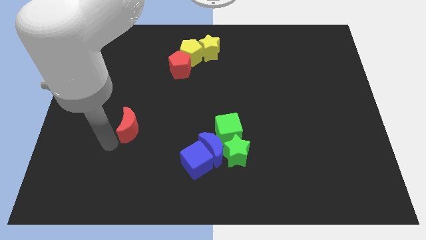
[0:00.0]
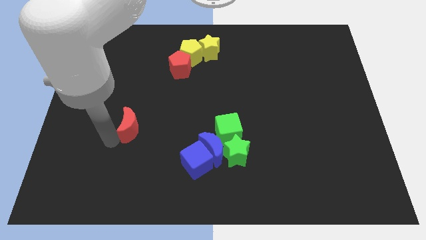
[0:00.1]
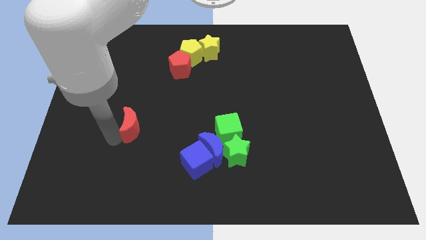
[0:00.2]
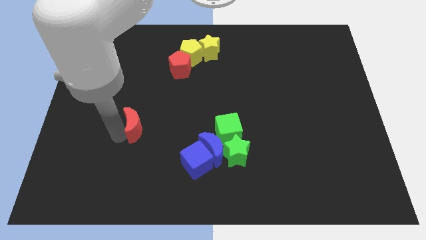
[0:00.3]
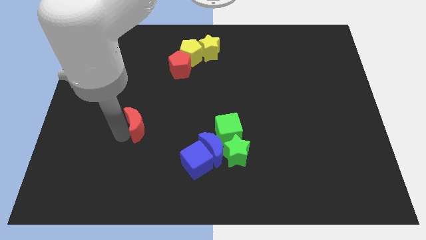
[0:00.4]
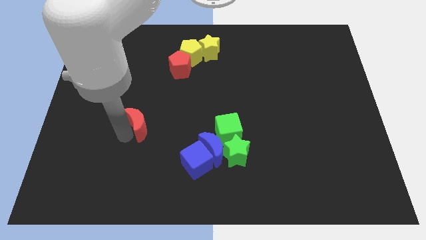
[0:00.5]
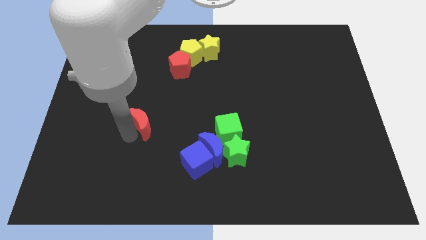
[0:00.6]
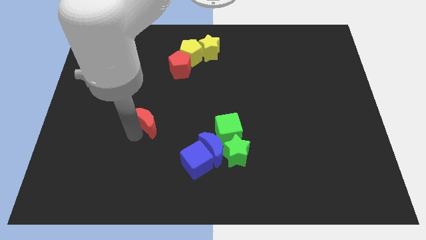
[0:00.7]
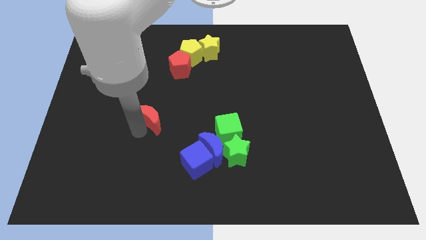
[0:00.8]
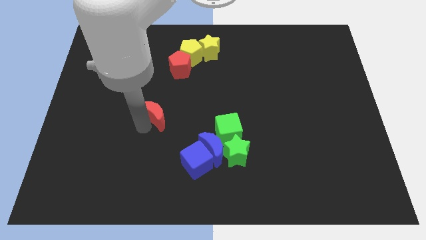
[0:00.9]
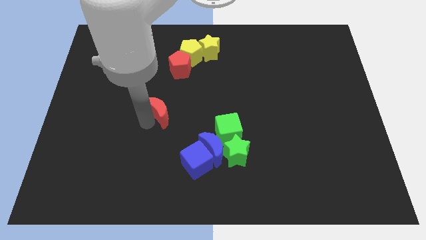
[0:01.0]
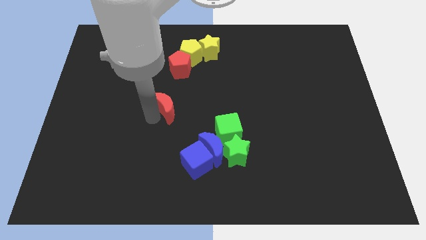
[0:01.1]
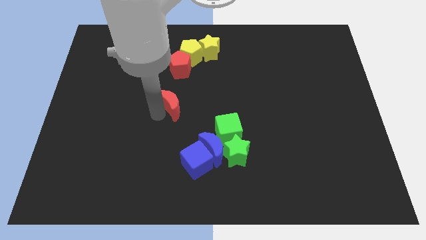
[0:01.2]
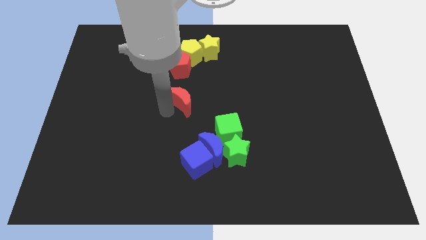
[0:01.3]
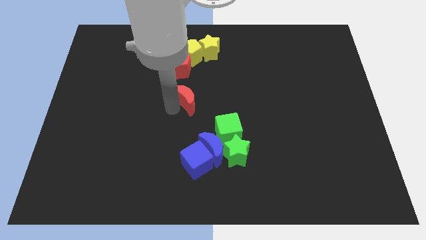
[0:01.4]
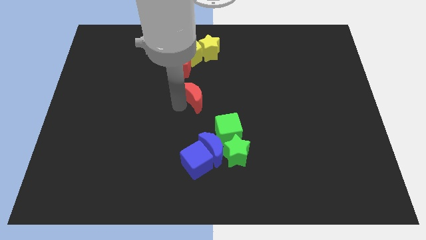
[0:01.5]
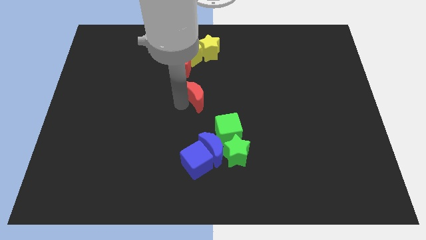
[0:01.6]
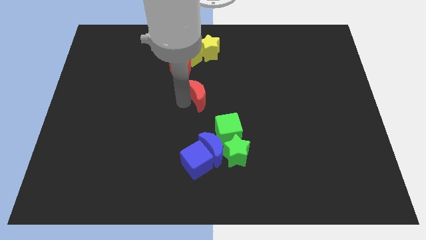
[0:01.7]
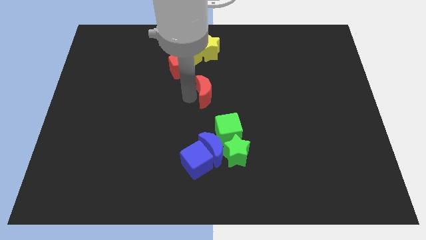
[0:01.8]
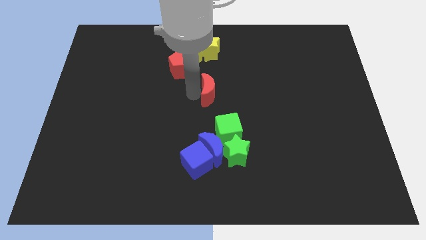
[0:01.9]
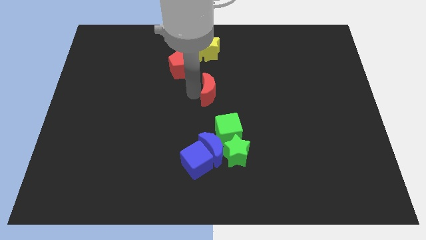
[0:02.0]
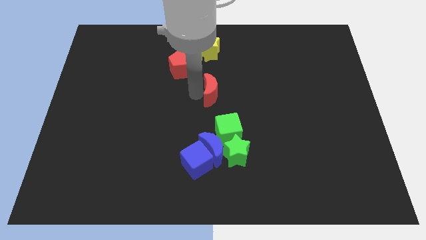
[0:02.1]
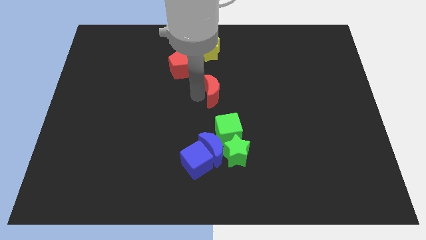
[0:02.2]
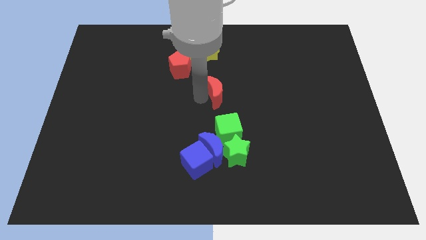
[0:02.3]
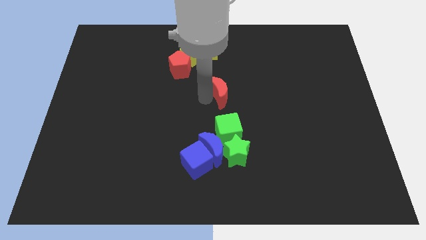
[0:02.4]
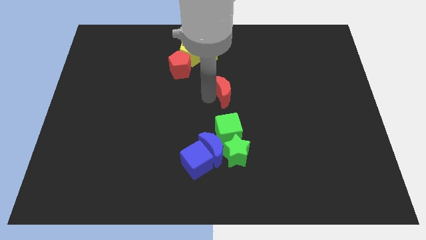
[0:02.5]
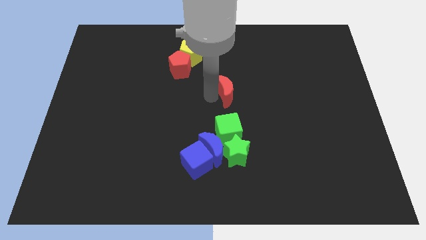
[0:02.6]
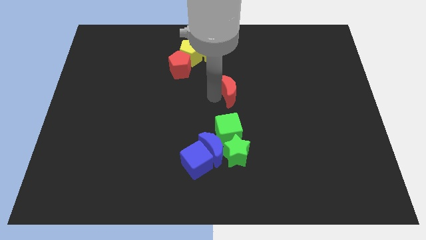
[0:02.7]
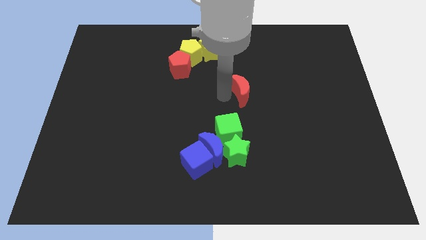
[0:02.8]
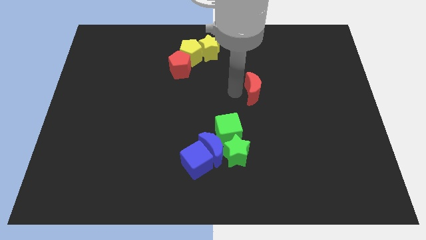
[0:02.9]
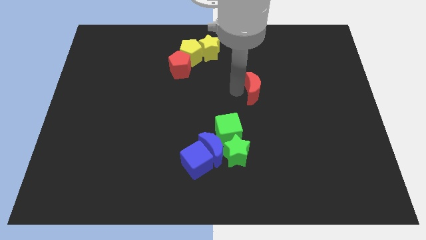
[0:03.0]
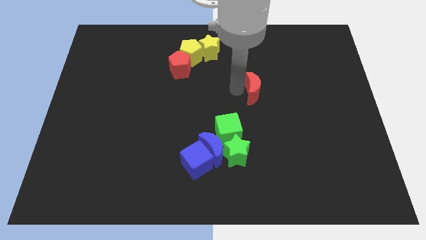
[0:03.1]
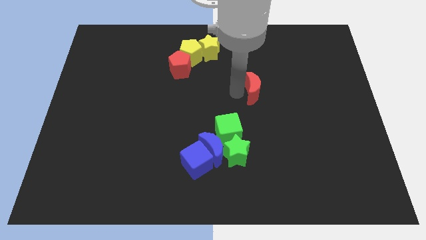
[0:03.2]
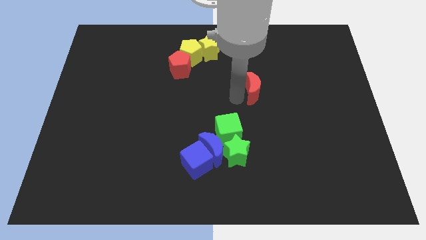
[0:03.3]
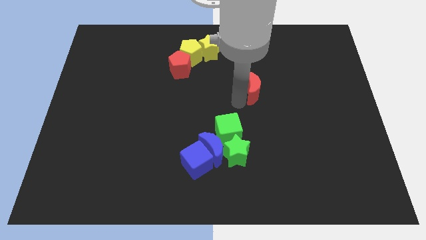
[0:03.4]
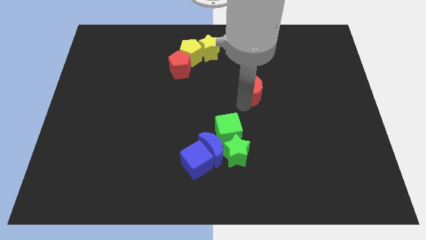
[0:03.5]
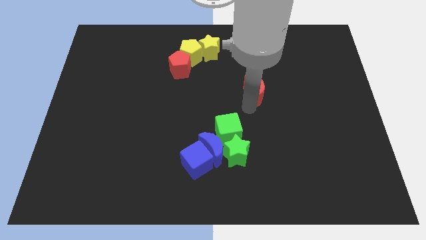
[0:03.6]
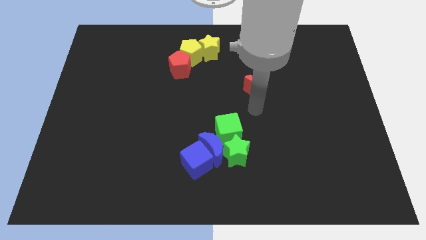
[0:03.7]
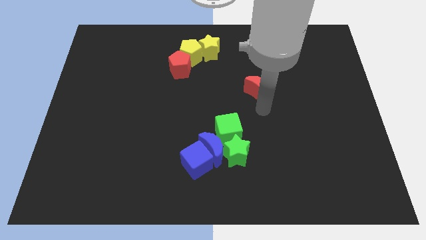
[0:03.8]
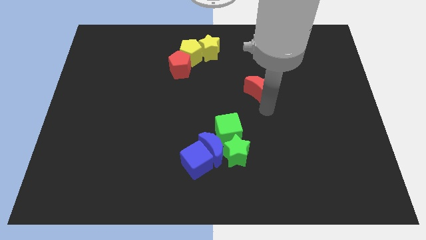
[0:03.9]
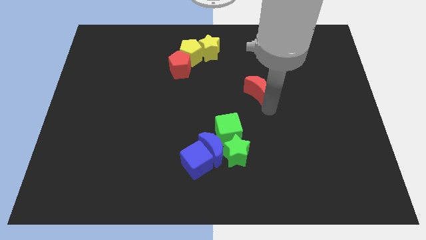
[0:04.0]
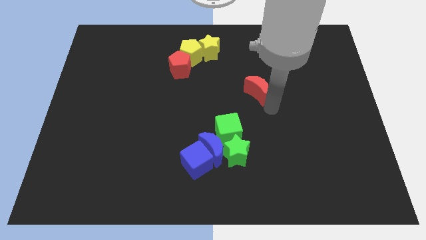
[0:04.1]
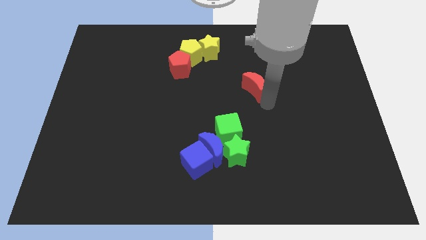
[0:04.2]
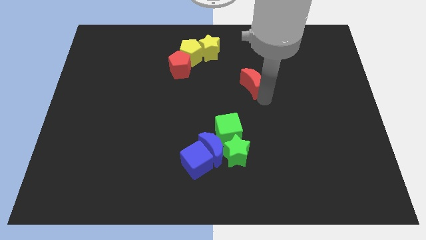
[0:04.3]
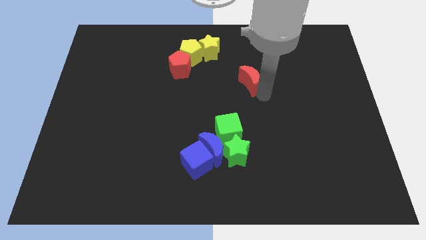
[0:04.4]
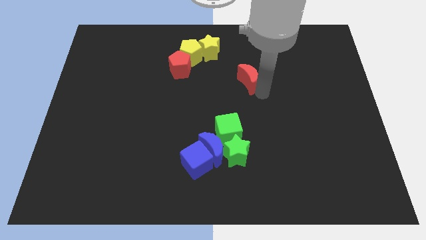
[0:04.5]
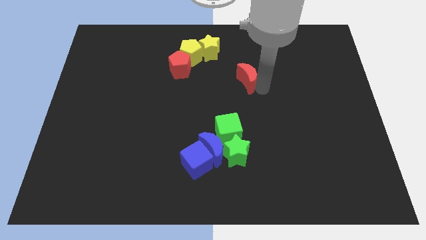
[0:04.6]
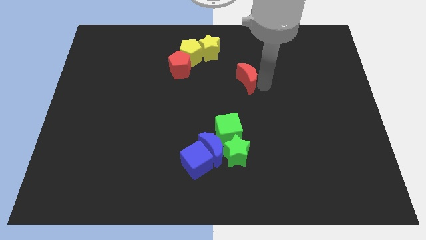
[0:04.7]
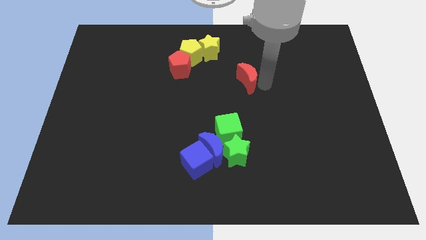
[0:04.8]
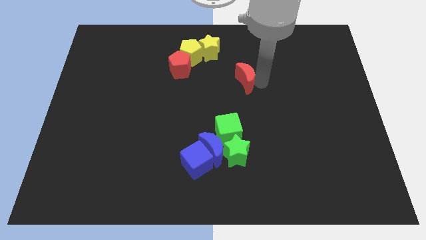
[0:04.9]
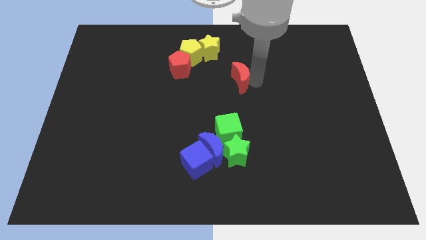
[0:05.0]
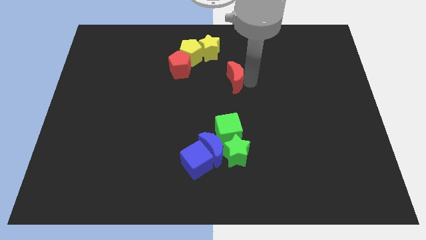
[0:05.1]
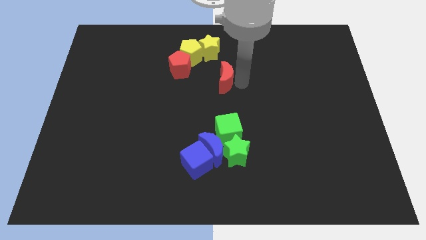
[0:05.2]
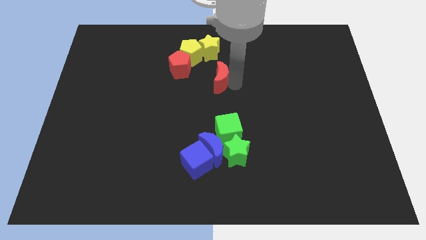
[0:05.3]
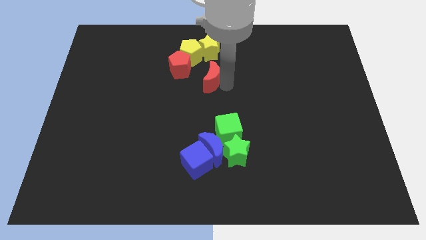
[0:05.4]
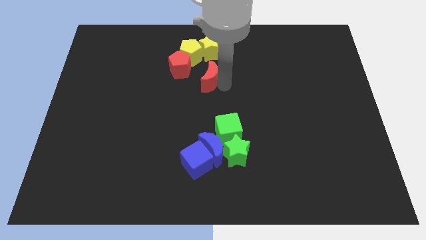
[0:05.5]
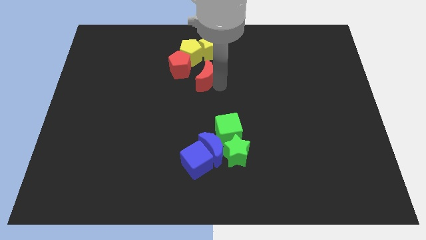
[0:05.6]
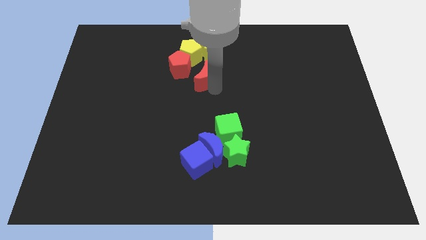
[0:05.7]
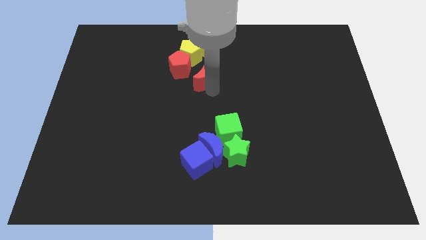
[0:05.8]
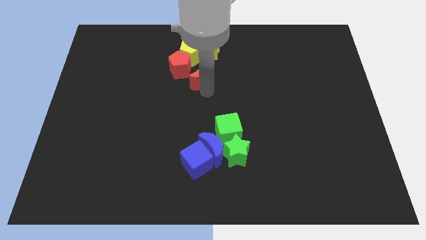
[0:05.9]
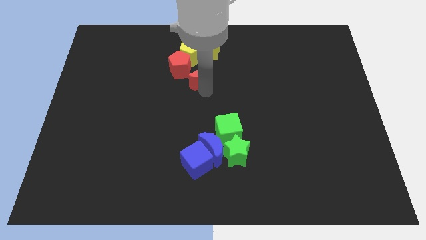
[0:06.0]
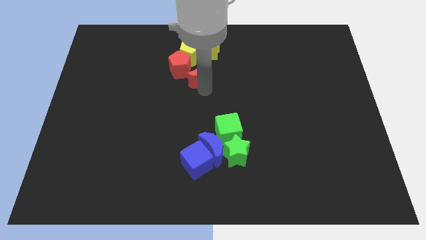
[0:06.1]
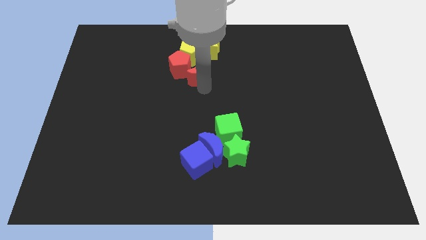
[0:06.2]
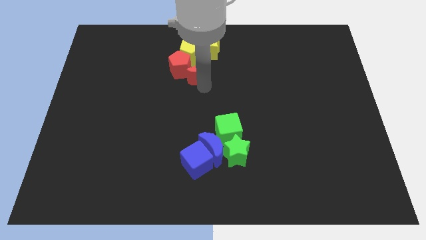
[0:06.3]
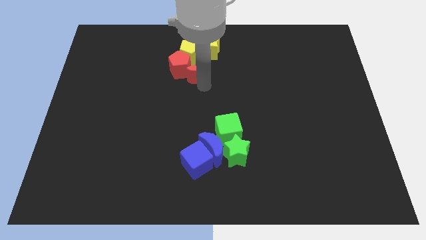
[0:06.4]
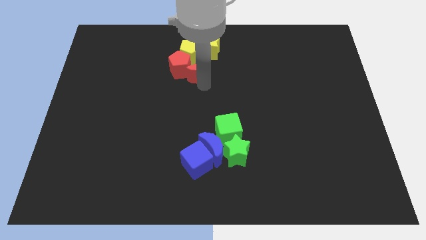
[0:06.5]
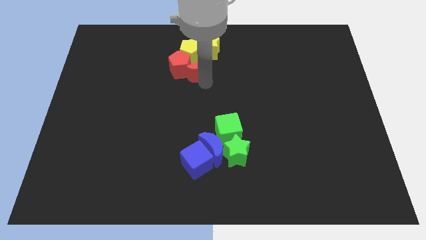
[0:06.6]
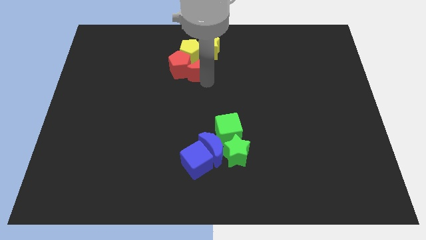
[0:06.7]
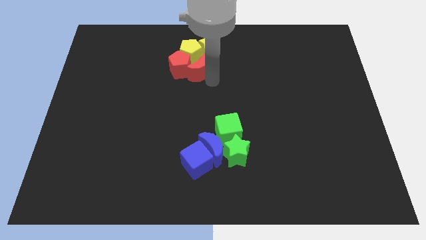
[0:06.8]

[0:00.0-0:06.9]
place the red crescent to the right of red pentagon

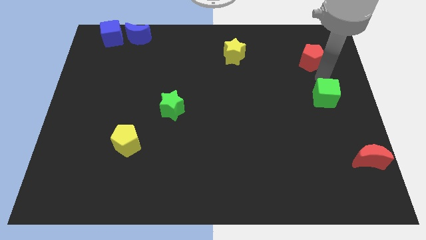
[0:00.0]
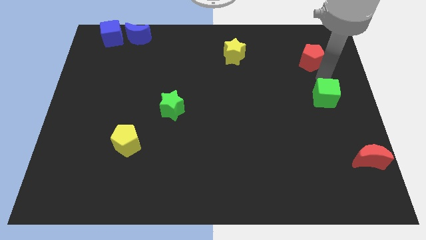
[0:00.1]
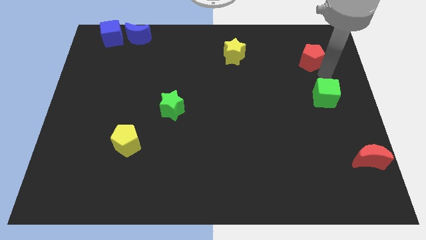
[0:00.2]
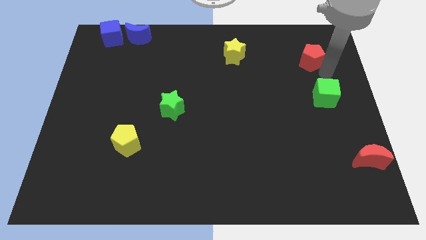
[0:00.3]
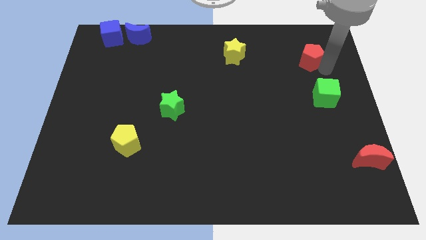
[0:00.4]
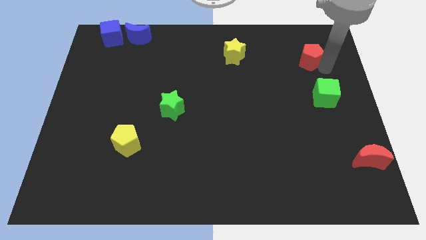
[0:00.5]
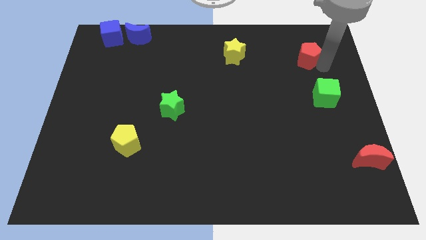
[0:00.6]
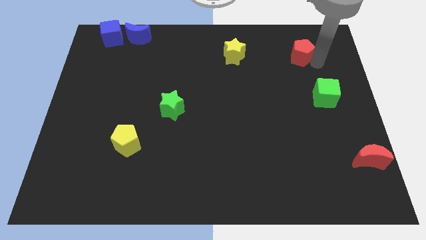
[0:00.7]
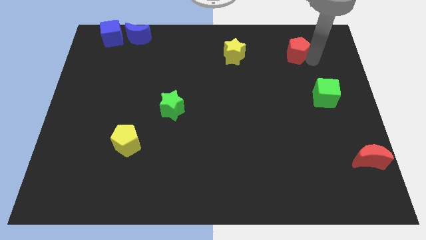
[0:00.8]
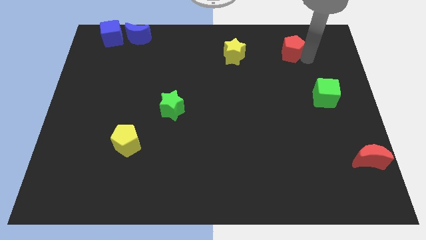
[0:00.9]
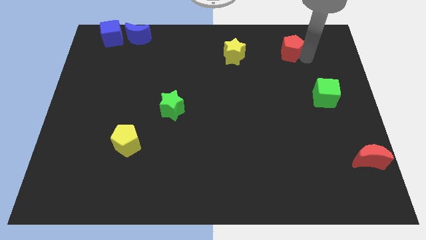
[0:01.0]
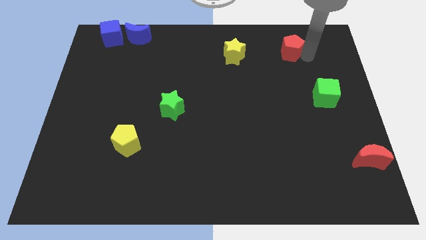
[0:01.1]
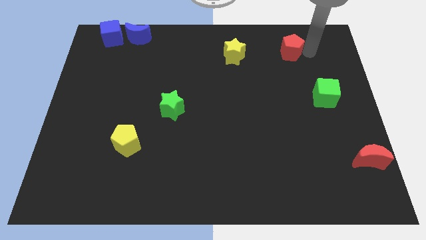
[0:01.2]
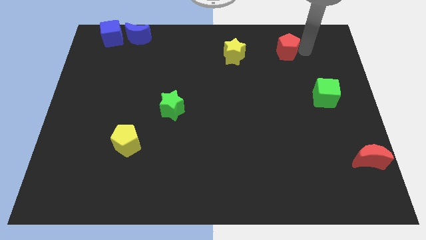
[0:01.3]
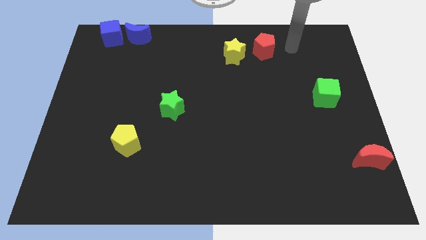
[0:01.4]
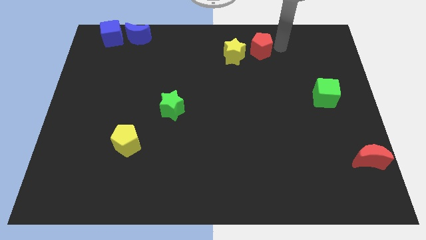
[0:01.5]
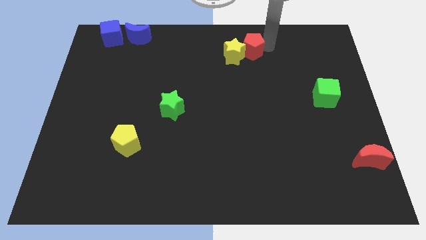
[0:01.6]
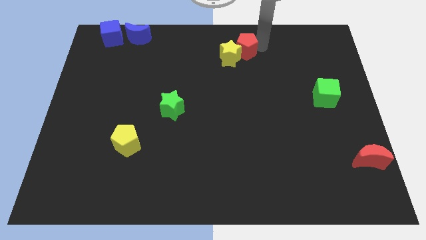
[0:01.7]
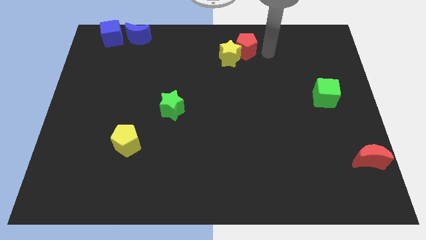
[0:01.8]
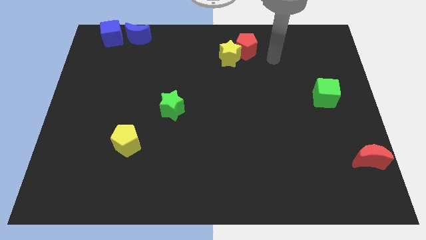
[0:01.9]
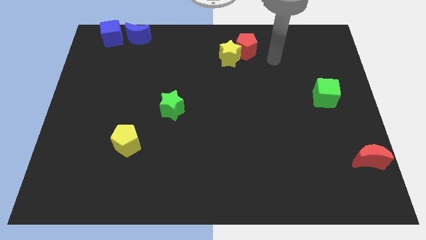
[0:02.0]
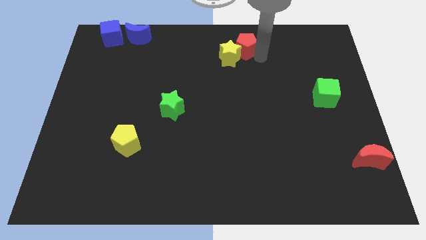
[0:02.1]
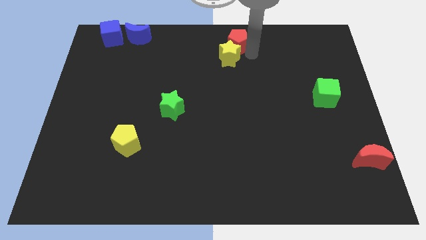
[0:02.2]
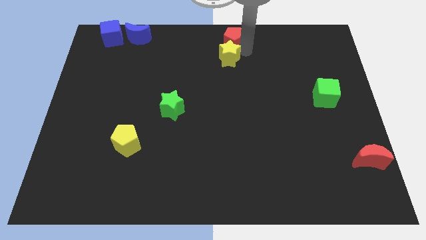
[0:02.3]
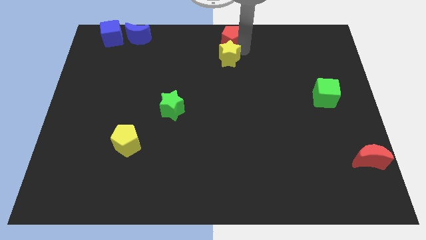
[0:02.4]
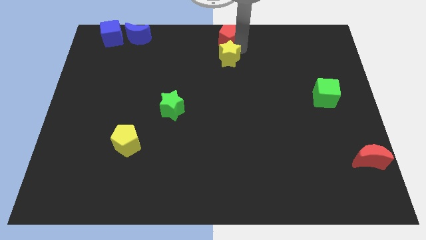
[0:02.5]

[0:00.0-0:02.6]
move red pentagon above yellow star
